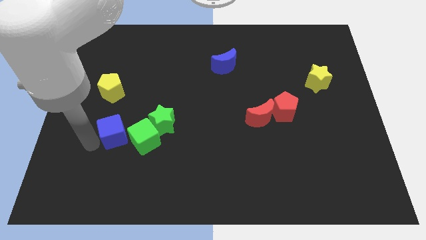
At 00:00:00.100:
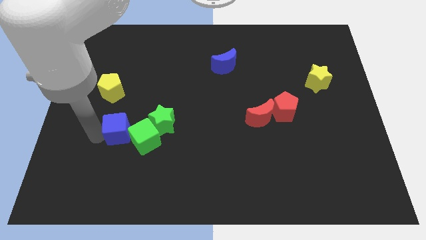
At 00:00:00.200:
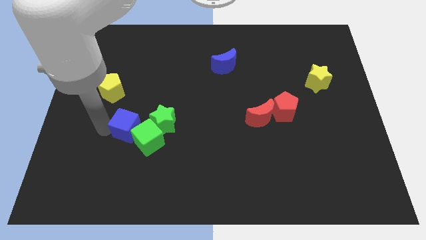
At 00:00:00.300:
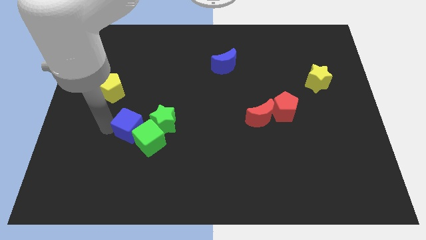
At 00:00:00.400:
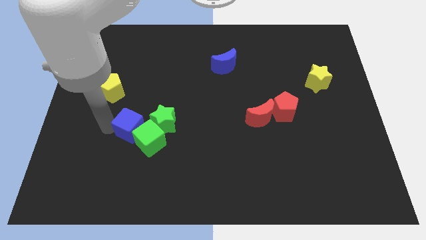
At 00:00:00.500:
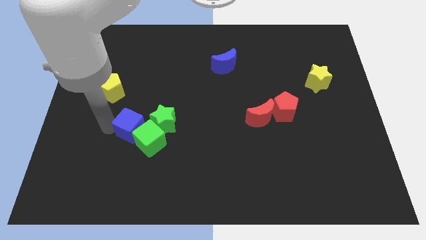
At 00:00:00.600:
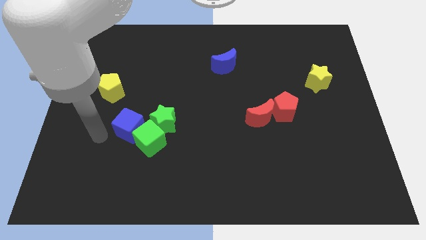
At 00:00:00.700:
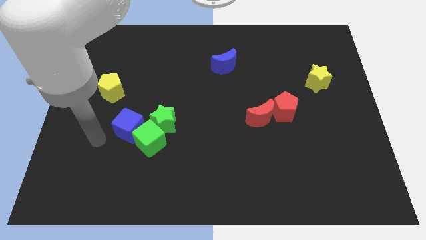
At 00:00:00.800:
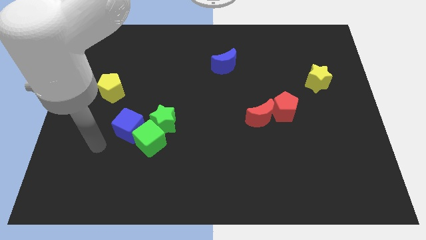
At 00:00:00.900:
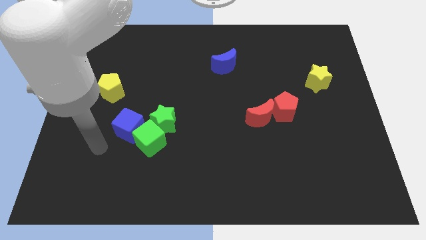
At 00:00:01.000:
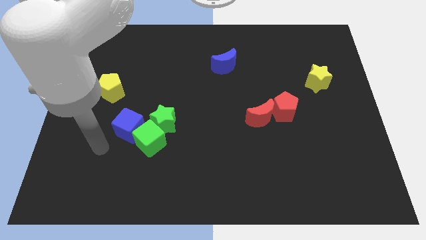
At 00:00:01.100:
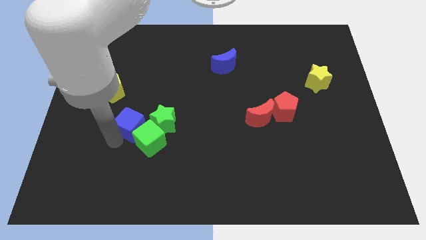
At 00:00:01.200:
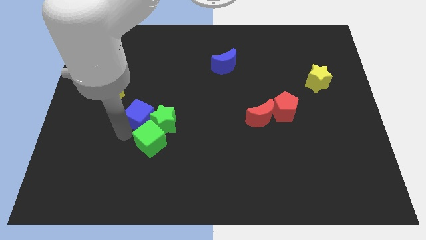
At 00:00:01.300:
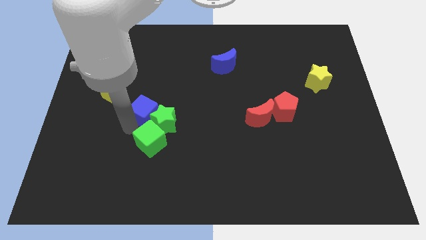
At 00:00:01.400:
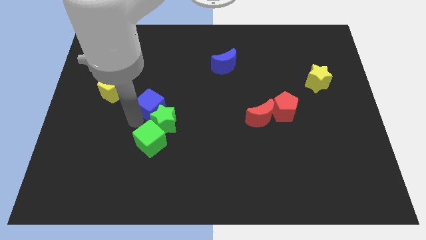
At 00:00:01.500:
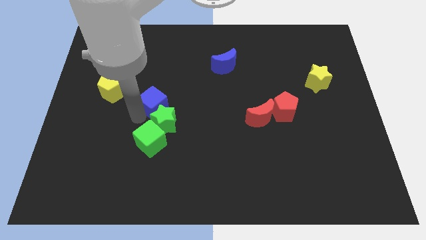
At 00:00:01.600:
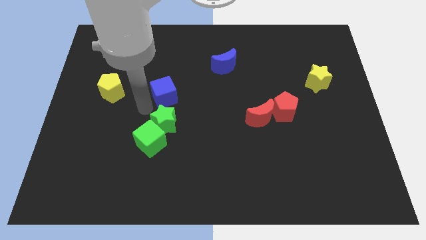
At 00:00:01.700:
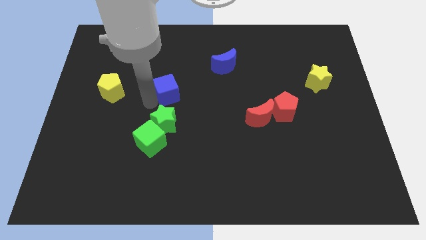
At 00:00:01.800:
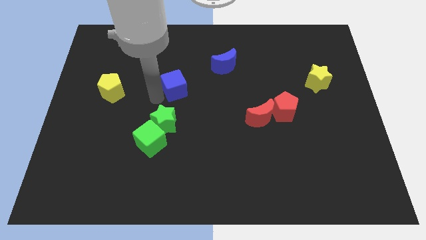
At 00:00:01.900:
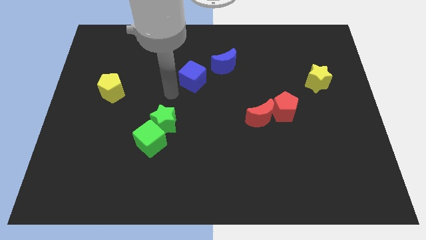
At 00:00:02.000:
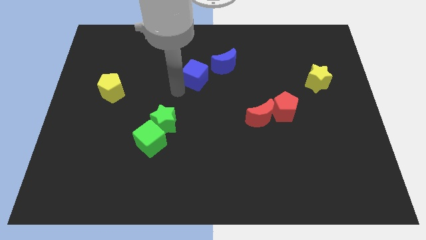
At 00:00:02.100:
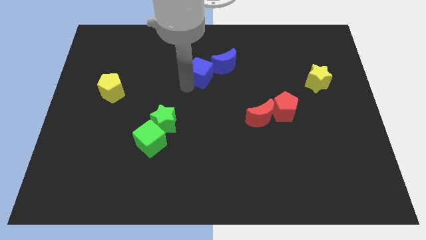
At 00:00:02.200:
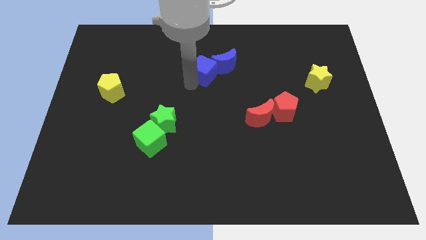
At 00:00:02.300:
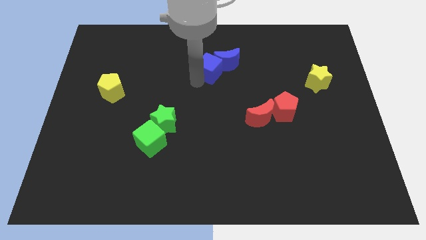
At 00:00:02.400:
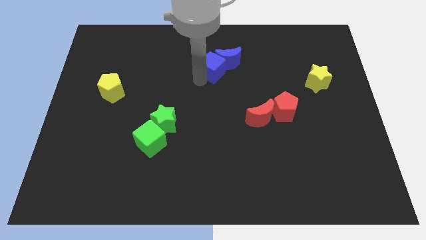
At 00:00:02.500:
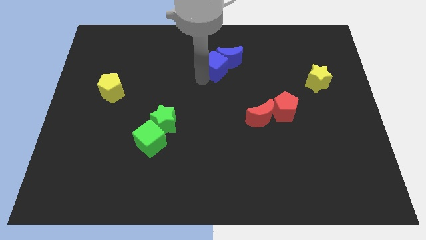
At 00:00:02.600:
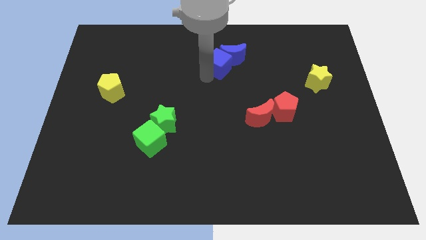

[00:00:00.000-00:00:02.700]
move the blue cube and blue crescent to the top center of the board

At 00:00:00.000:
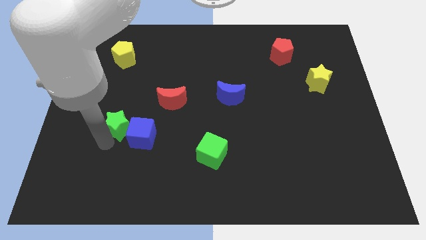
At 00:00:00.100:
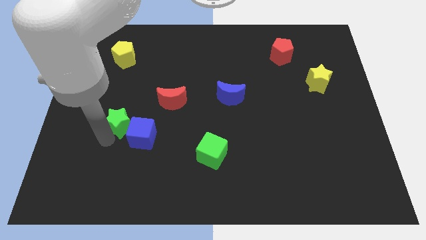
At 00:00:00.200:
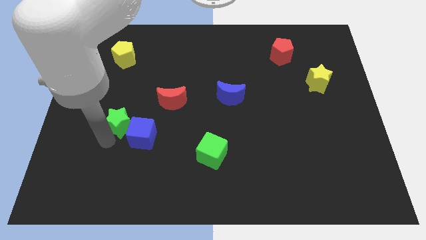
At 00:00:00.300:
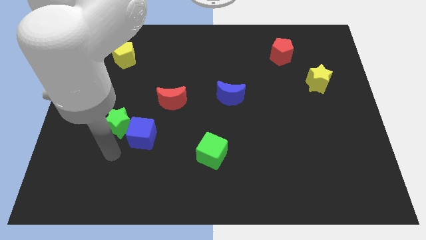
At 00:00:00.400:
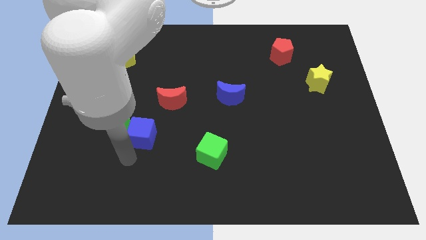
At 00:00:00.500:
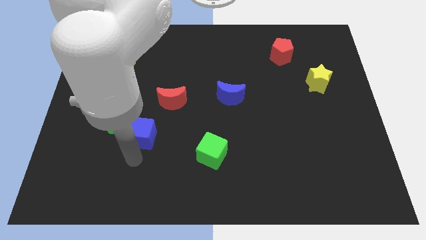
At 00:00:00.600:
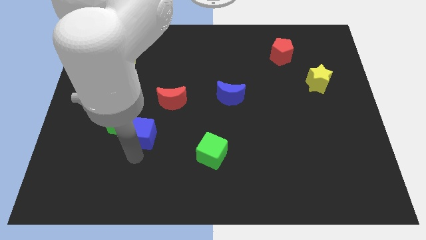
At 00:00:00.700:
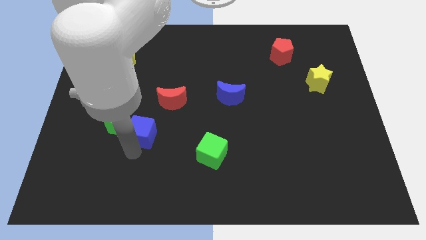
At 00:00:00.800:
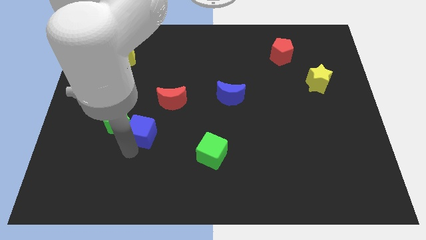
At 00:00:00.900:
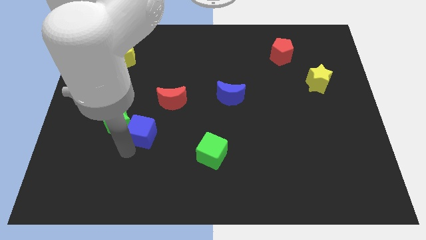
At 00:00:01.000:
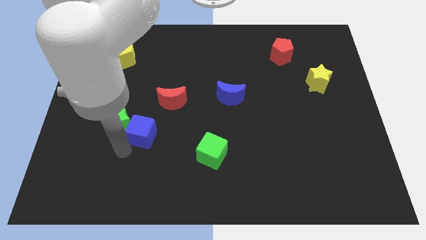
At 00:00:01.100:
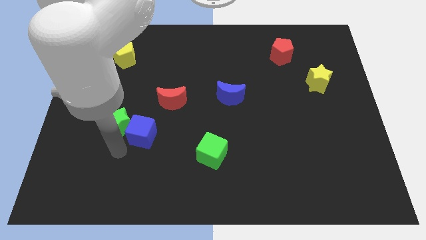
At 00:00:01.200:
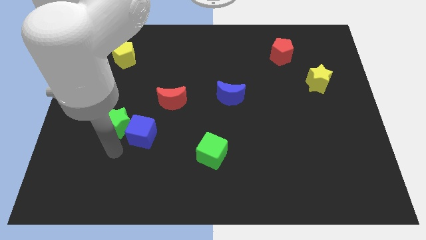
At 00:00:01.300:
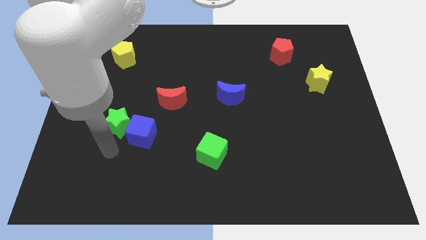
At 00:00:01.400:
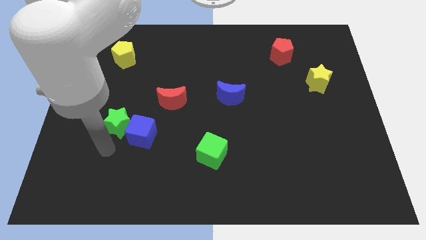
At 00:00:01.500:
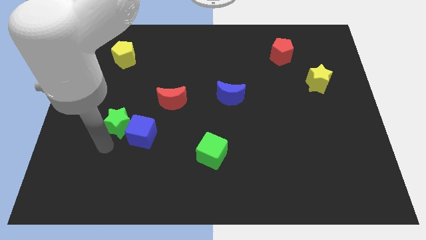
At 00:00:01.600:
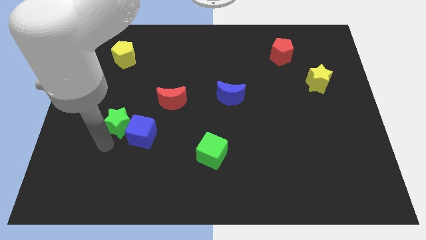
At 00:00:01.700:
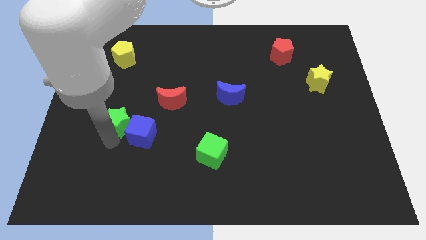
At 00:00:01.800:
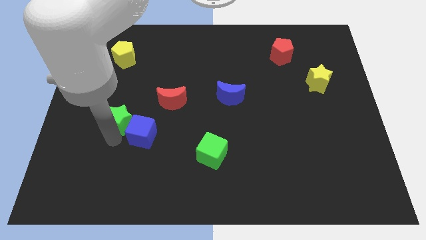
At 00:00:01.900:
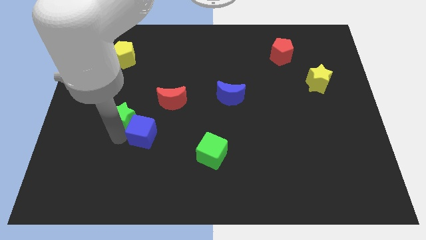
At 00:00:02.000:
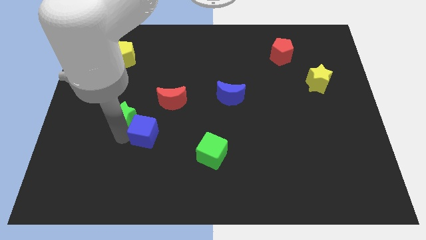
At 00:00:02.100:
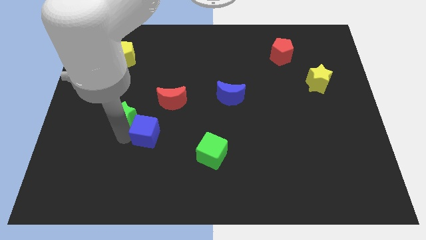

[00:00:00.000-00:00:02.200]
adjust the blue cube at the bottom left of the red moon

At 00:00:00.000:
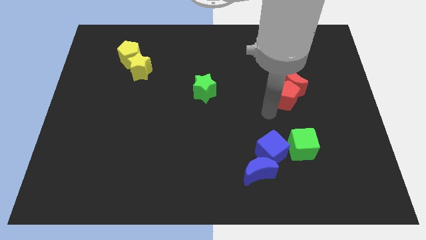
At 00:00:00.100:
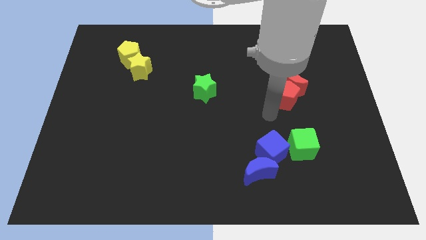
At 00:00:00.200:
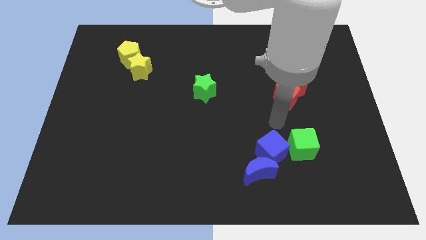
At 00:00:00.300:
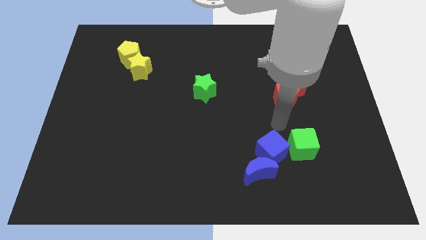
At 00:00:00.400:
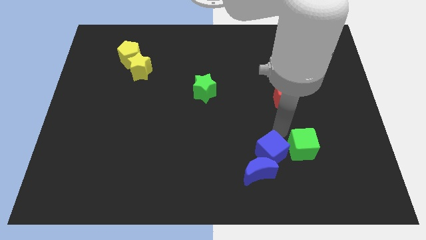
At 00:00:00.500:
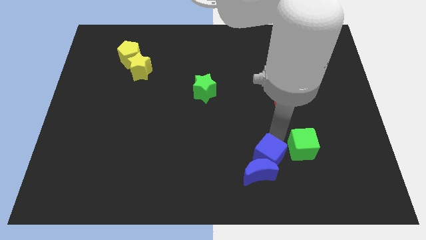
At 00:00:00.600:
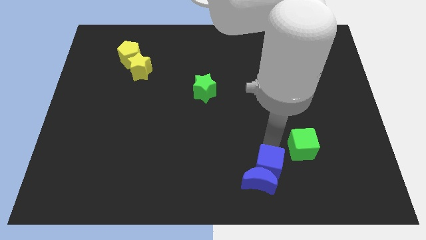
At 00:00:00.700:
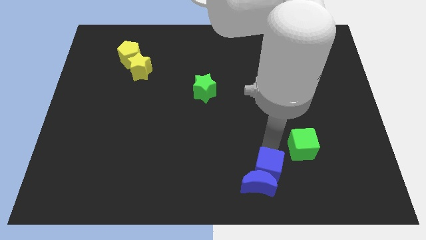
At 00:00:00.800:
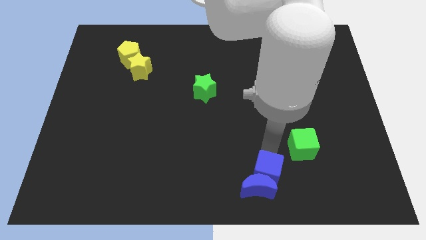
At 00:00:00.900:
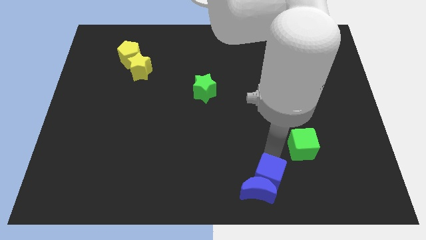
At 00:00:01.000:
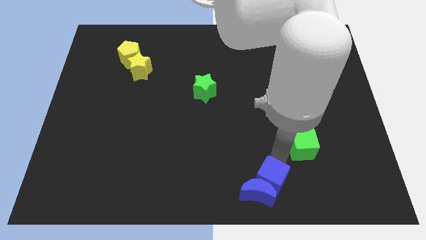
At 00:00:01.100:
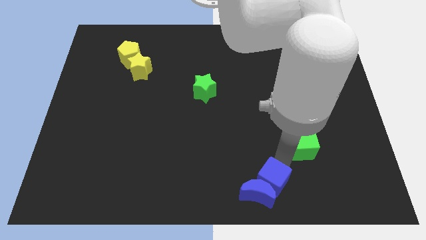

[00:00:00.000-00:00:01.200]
push the blue blocks to the bottom of the board

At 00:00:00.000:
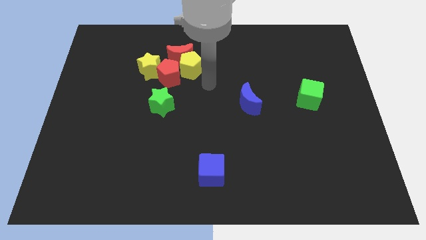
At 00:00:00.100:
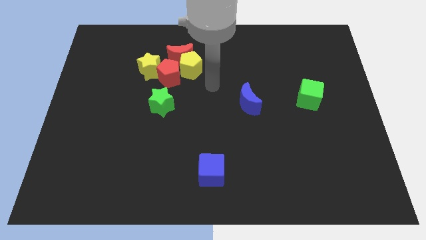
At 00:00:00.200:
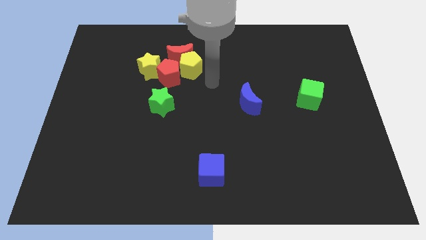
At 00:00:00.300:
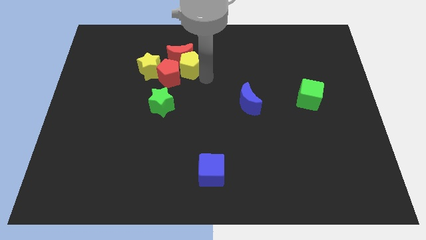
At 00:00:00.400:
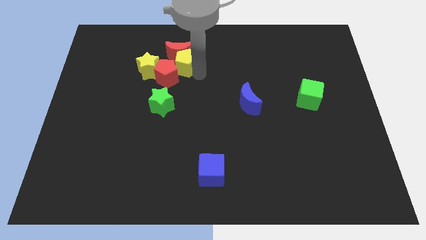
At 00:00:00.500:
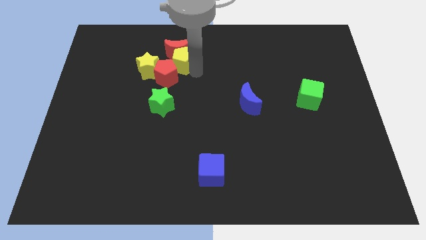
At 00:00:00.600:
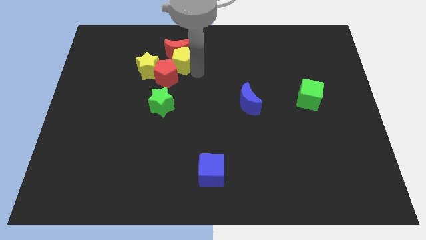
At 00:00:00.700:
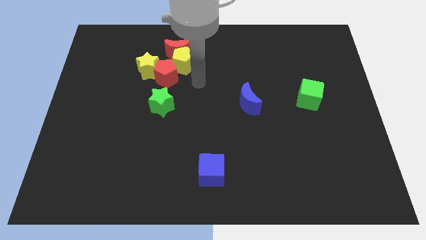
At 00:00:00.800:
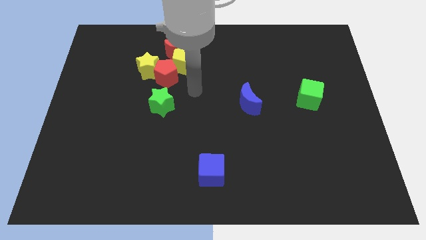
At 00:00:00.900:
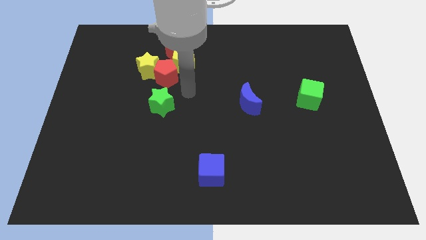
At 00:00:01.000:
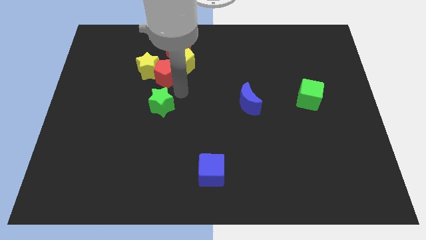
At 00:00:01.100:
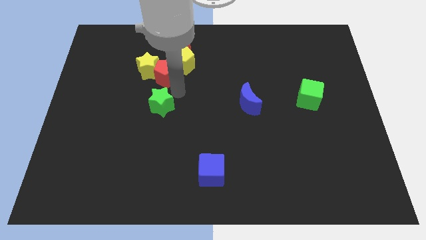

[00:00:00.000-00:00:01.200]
push yellow pentagon in to red pentagon

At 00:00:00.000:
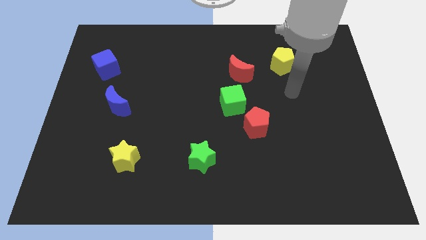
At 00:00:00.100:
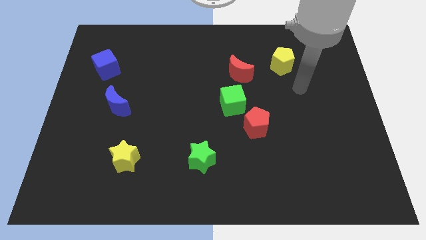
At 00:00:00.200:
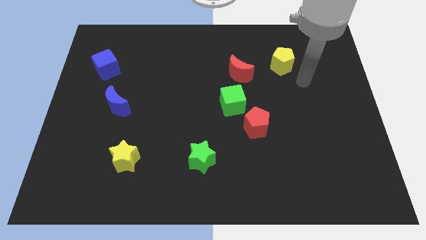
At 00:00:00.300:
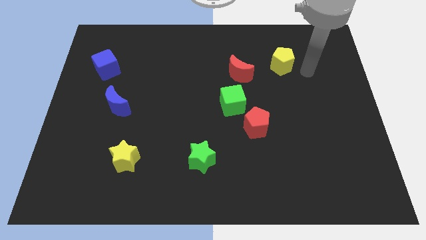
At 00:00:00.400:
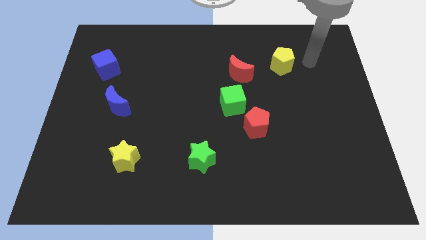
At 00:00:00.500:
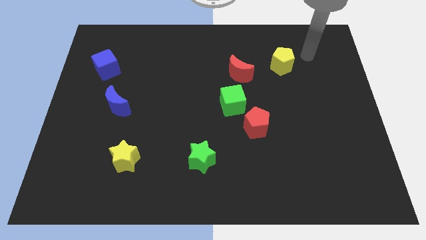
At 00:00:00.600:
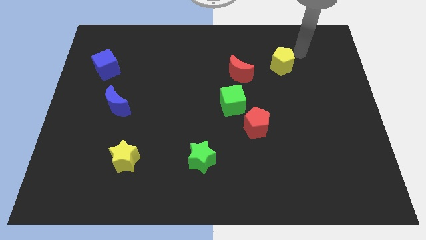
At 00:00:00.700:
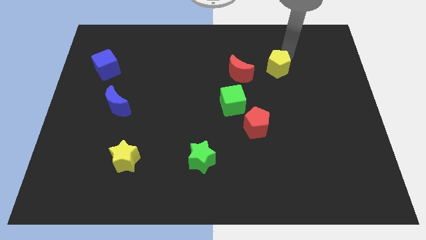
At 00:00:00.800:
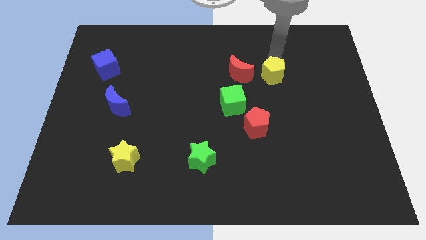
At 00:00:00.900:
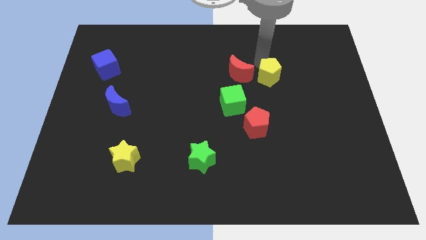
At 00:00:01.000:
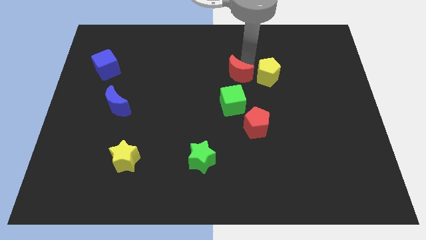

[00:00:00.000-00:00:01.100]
move the yellow star right to the red crescent

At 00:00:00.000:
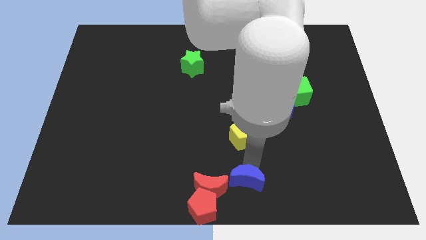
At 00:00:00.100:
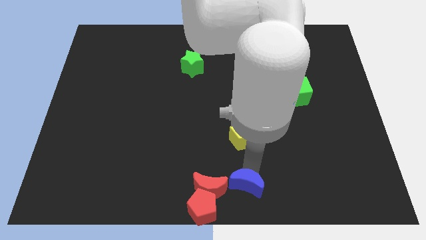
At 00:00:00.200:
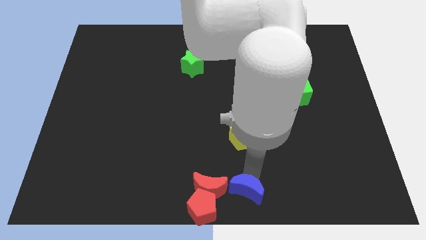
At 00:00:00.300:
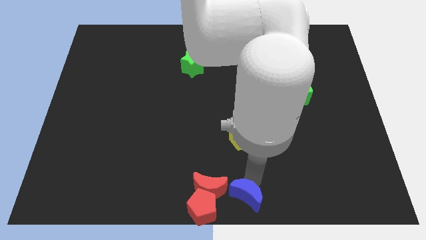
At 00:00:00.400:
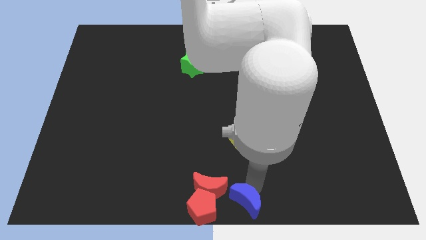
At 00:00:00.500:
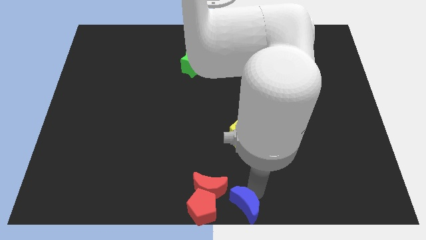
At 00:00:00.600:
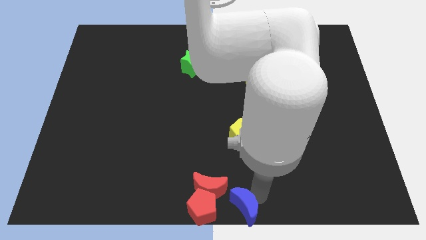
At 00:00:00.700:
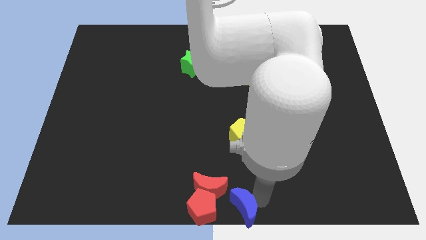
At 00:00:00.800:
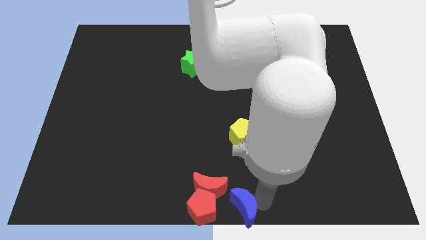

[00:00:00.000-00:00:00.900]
place the blue crescent at the bottom
